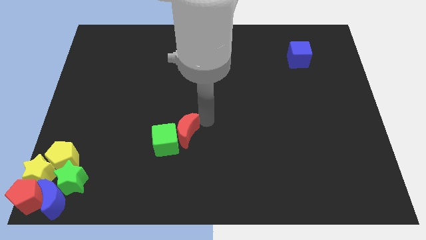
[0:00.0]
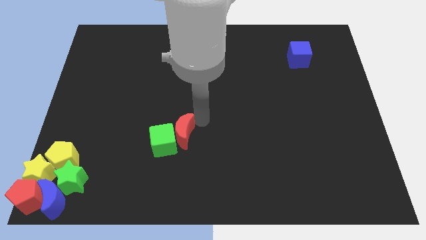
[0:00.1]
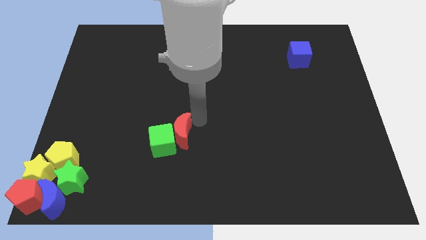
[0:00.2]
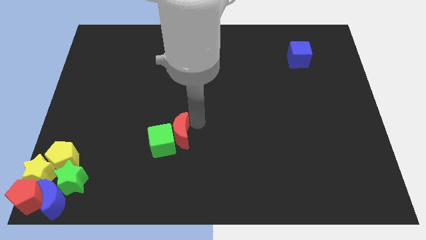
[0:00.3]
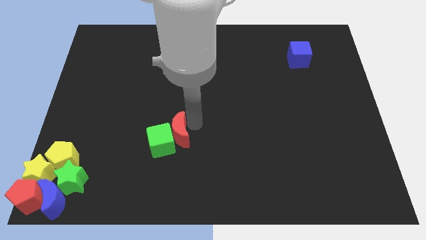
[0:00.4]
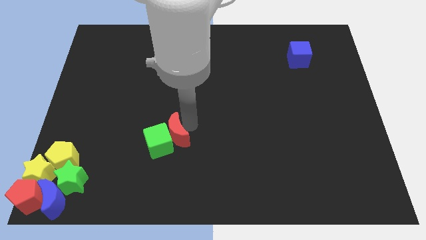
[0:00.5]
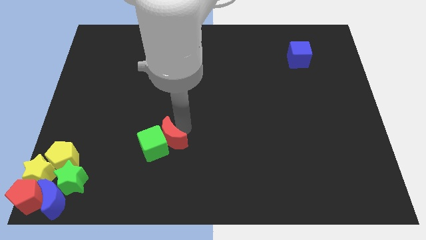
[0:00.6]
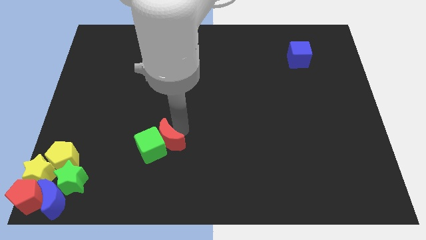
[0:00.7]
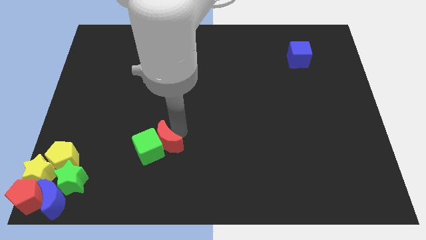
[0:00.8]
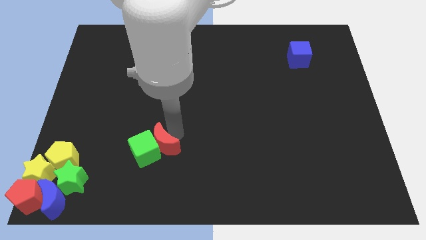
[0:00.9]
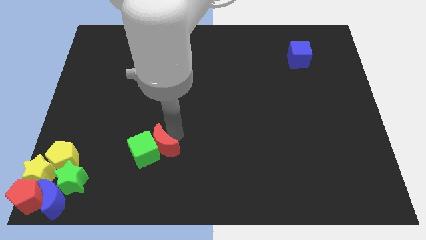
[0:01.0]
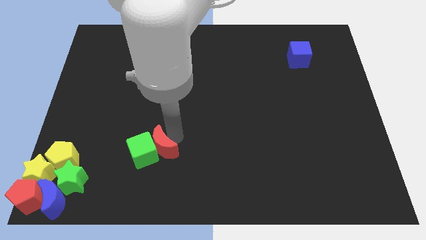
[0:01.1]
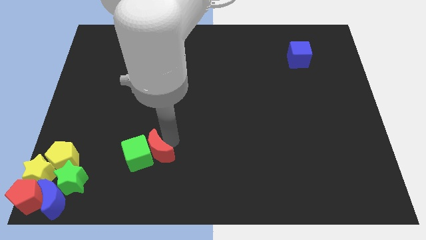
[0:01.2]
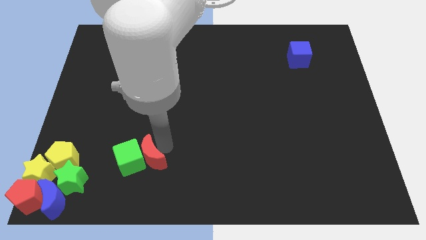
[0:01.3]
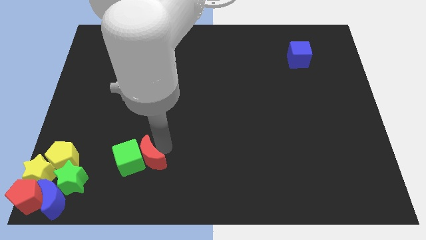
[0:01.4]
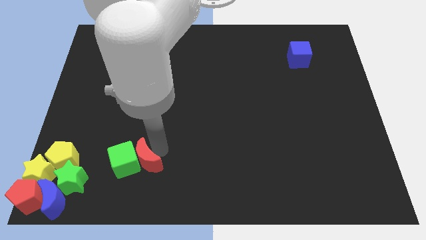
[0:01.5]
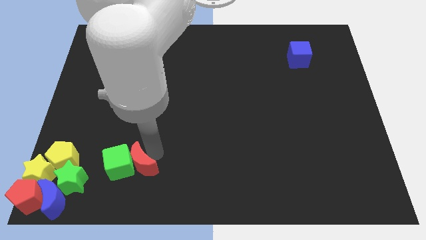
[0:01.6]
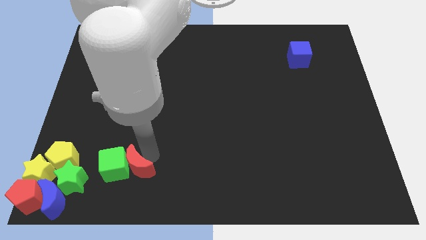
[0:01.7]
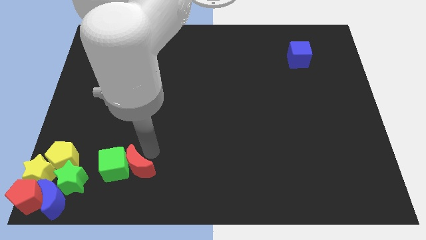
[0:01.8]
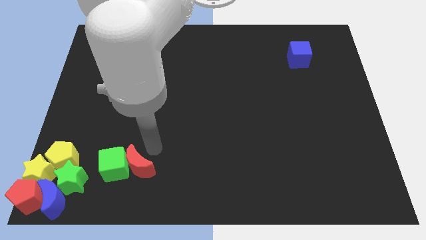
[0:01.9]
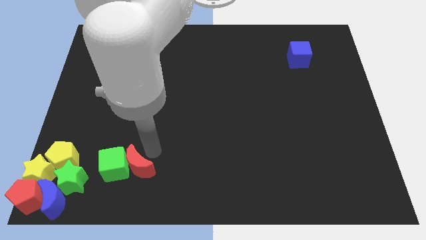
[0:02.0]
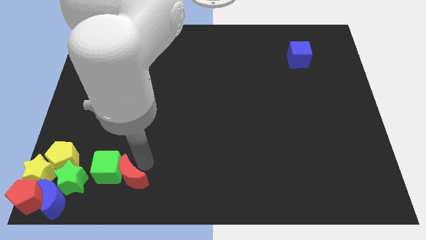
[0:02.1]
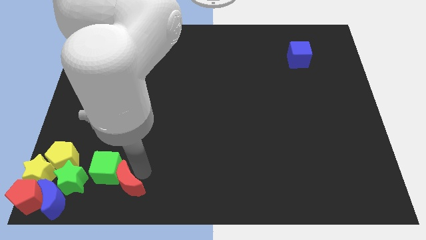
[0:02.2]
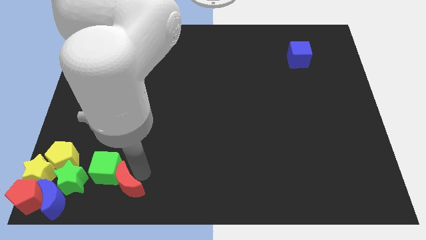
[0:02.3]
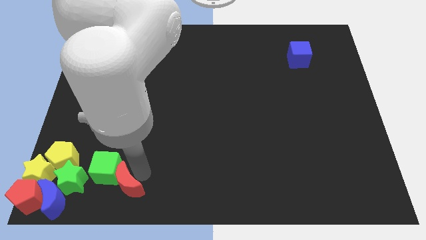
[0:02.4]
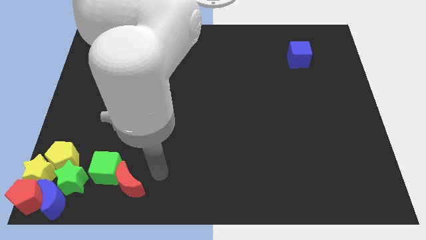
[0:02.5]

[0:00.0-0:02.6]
move the green cube and red moon towards the bottom left corner of the board

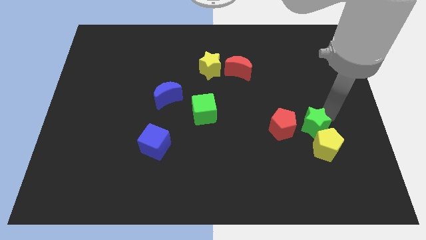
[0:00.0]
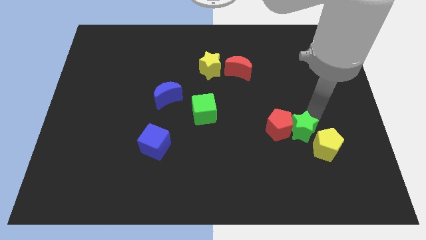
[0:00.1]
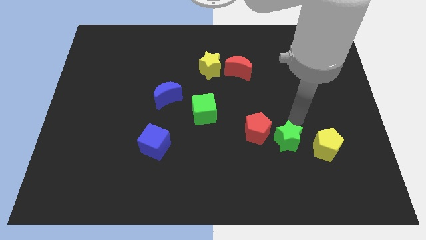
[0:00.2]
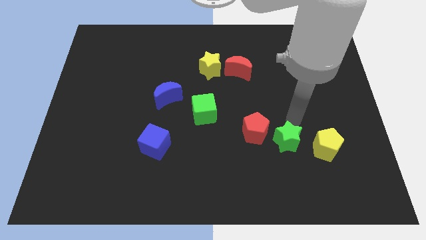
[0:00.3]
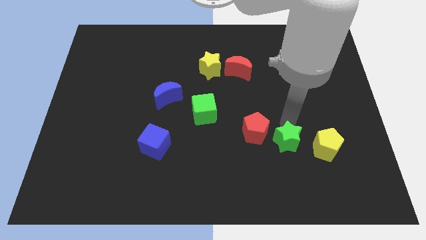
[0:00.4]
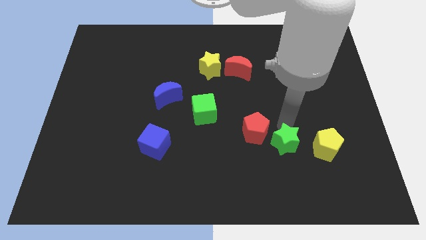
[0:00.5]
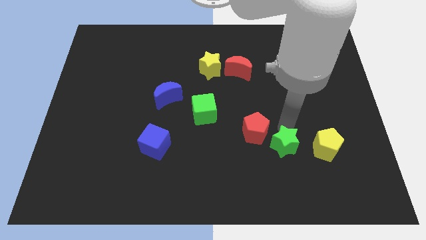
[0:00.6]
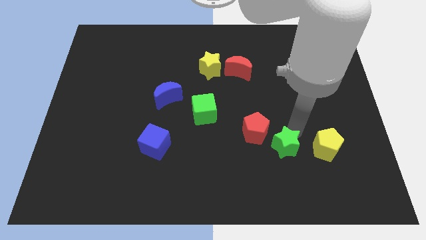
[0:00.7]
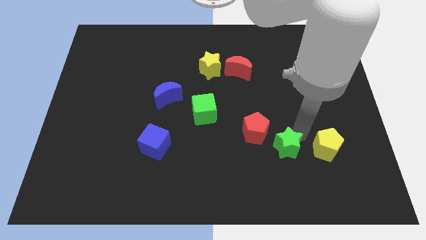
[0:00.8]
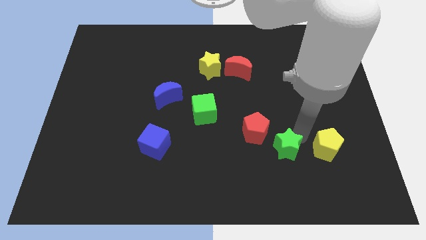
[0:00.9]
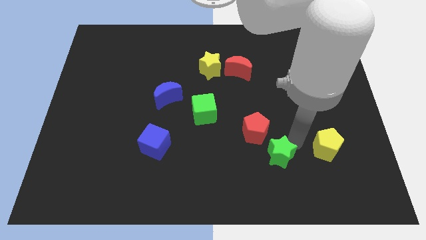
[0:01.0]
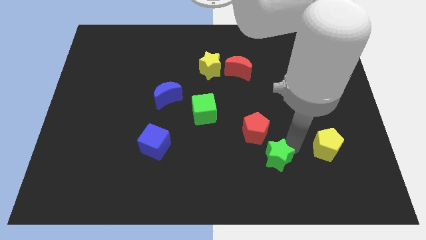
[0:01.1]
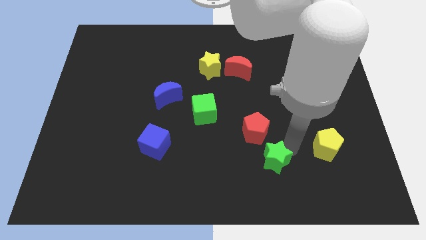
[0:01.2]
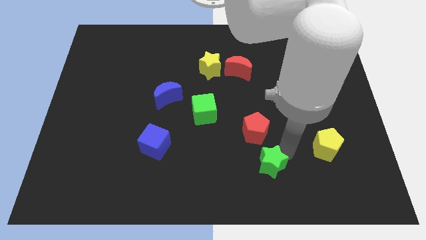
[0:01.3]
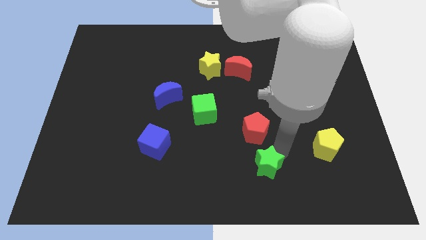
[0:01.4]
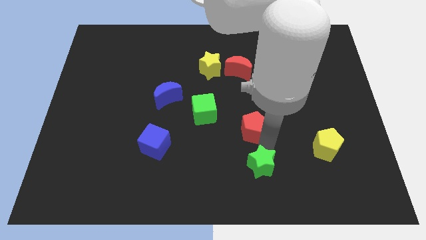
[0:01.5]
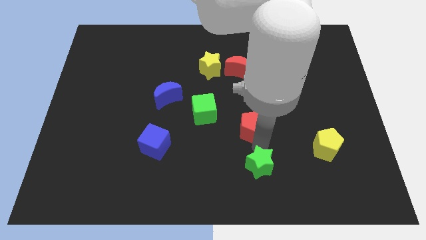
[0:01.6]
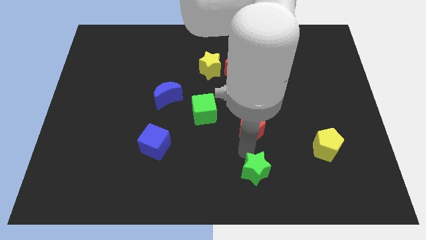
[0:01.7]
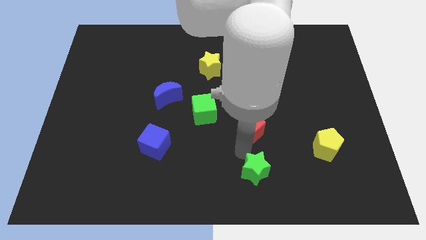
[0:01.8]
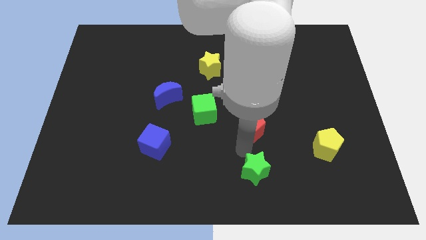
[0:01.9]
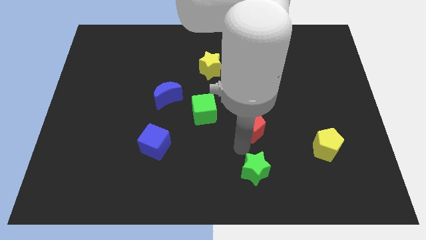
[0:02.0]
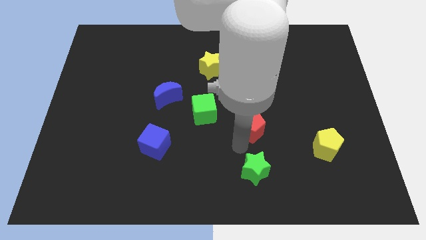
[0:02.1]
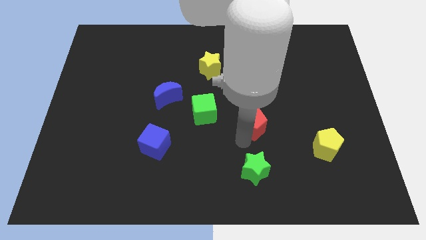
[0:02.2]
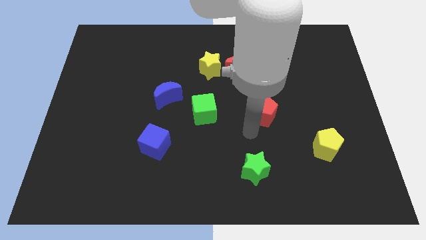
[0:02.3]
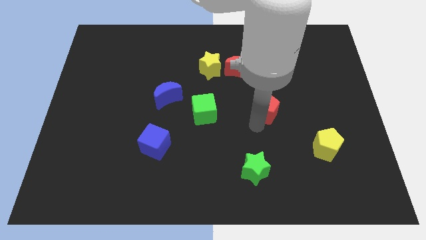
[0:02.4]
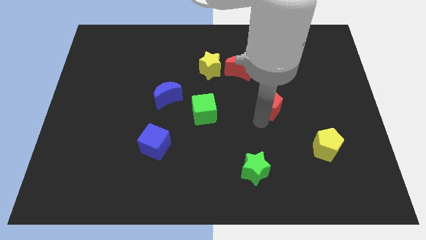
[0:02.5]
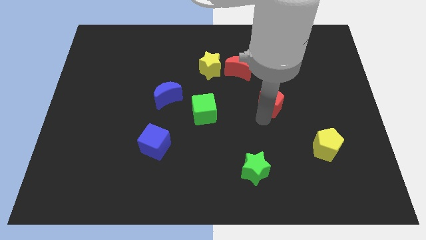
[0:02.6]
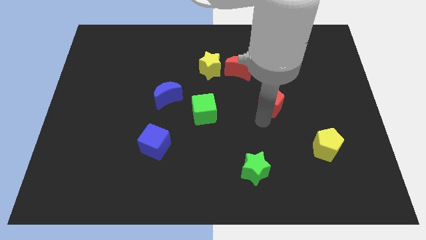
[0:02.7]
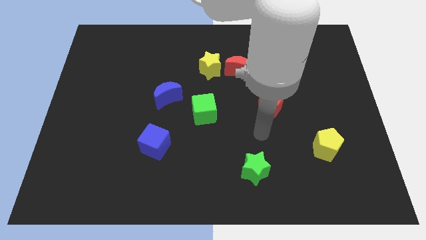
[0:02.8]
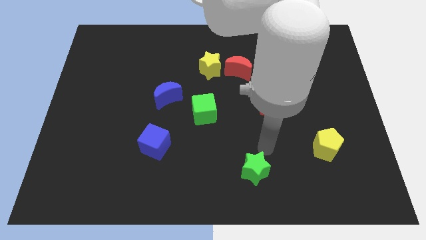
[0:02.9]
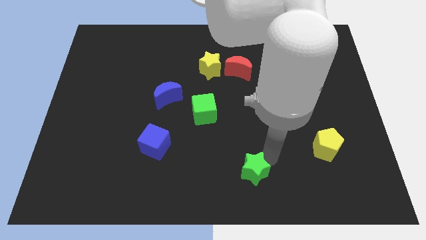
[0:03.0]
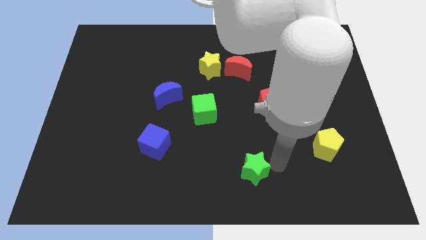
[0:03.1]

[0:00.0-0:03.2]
separate the green star and red pentagon

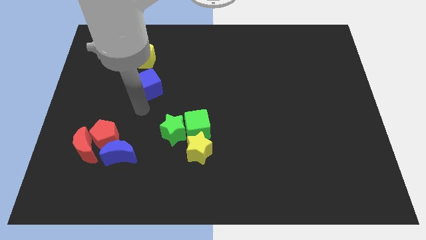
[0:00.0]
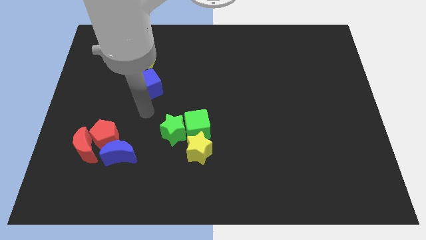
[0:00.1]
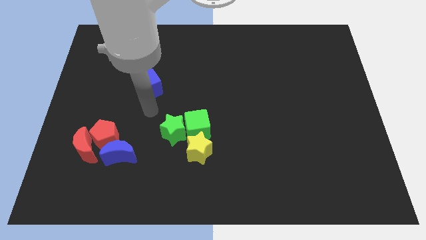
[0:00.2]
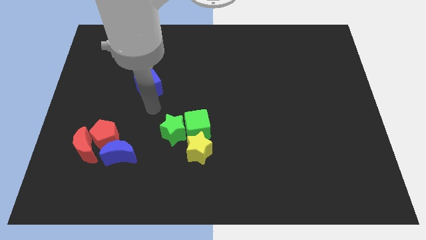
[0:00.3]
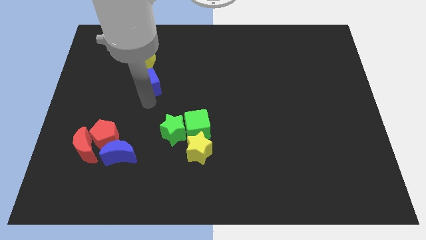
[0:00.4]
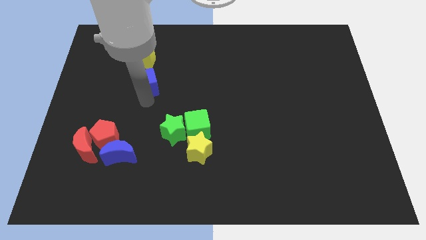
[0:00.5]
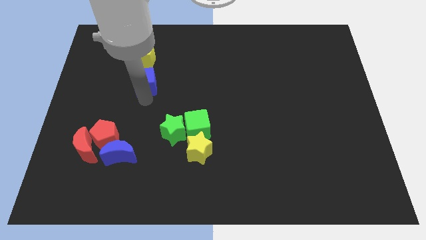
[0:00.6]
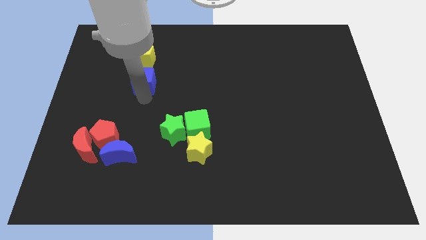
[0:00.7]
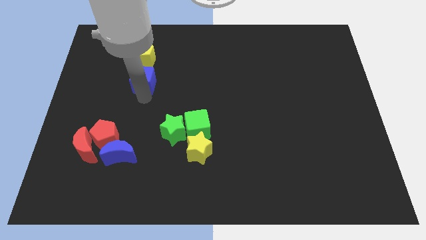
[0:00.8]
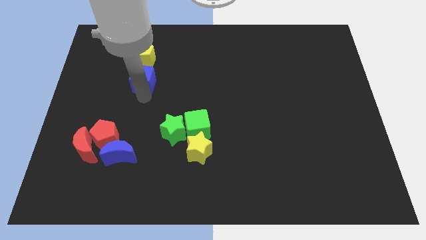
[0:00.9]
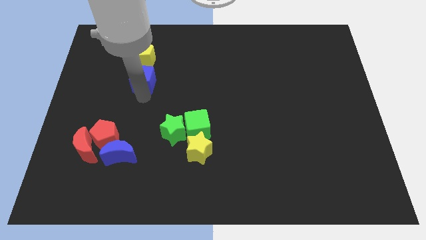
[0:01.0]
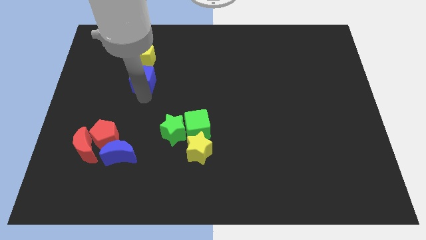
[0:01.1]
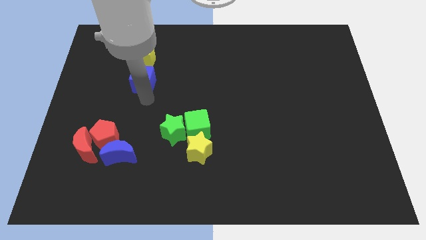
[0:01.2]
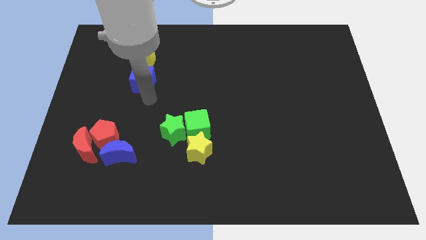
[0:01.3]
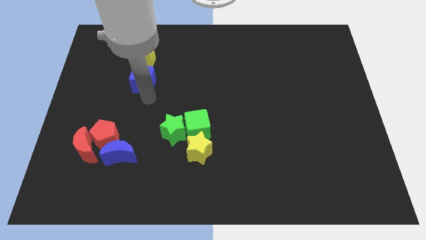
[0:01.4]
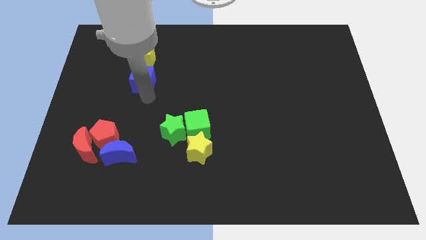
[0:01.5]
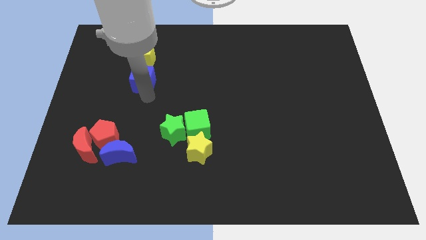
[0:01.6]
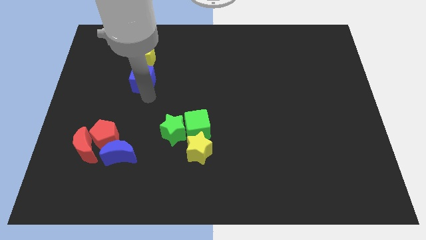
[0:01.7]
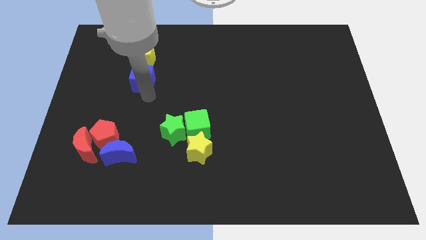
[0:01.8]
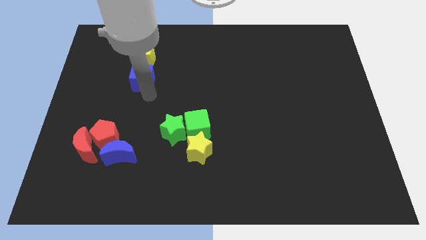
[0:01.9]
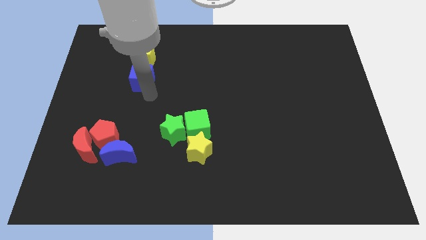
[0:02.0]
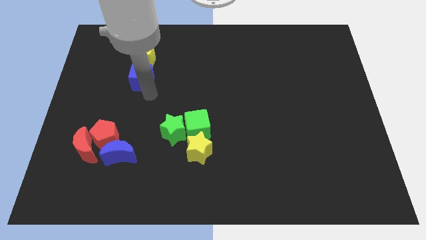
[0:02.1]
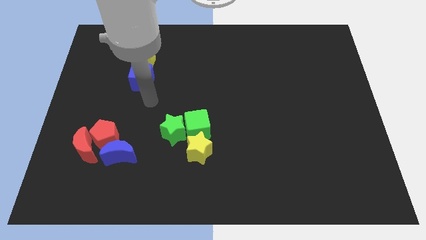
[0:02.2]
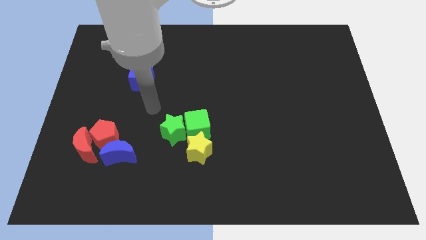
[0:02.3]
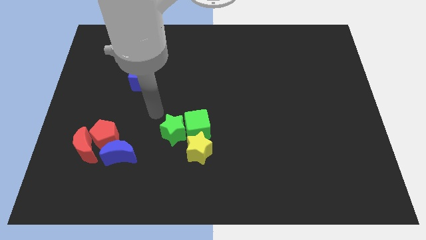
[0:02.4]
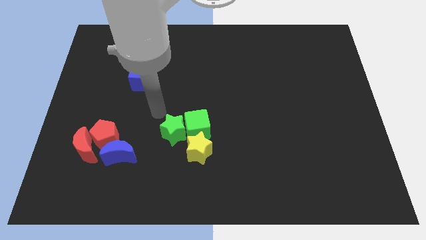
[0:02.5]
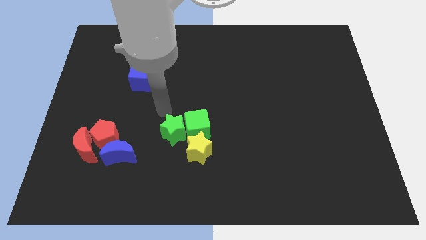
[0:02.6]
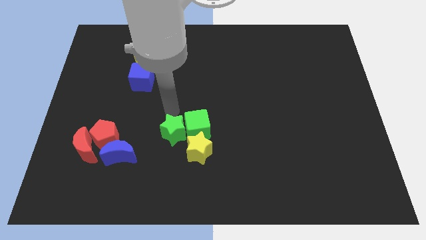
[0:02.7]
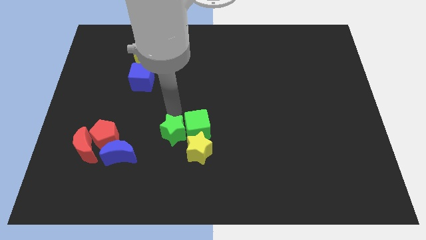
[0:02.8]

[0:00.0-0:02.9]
move the blue cube into the yellow pentagon

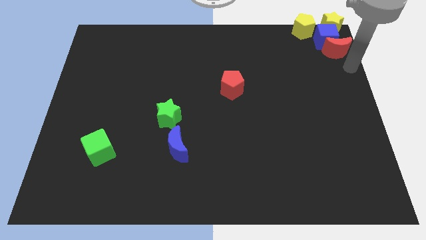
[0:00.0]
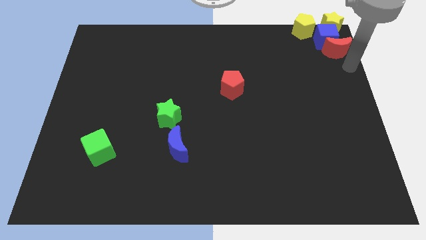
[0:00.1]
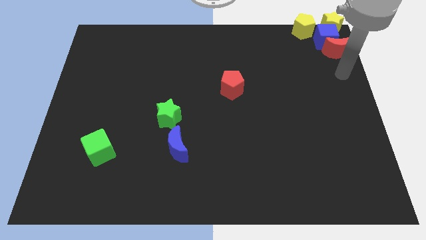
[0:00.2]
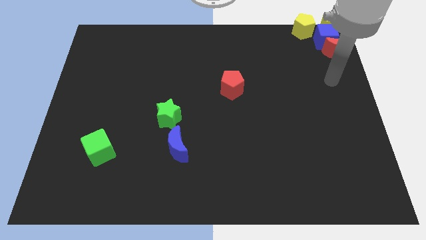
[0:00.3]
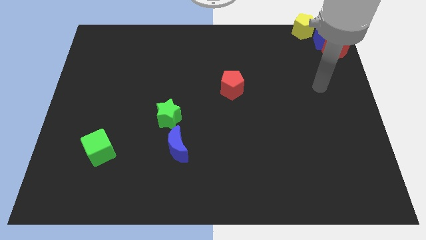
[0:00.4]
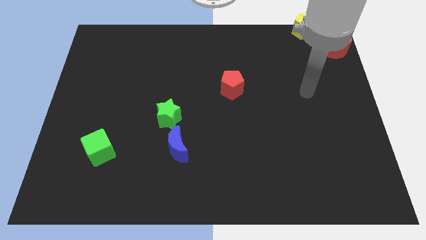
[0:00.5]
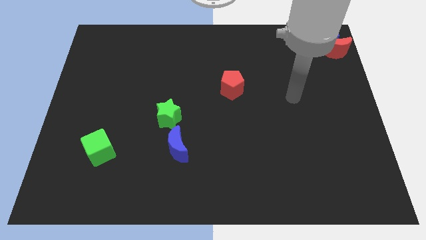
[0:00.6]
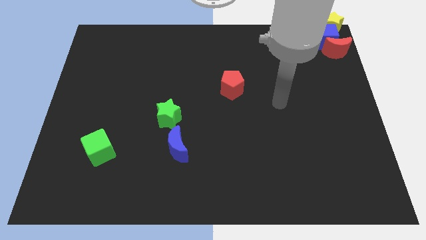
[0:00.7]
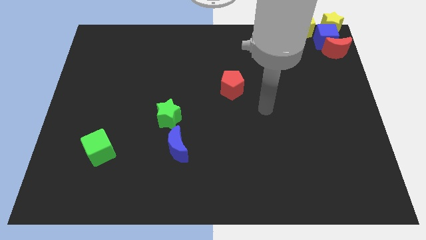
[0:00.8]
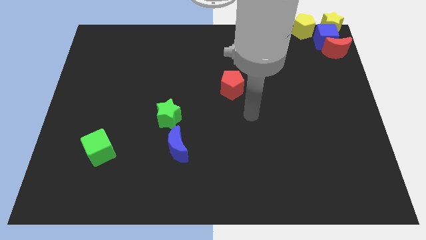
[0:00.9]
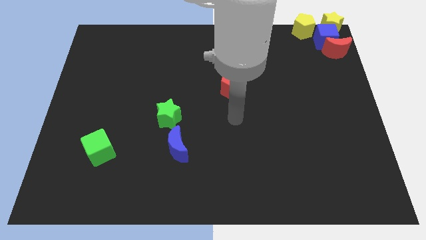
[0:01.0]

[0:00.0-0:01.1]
place your arm at the bottom of red pentagon
